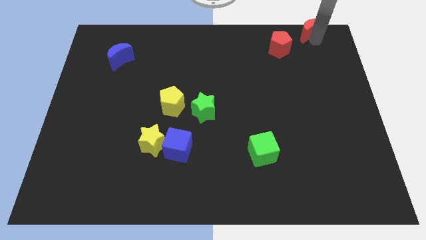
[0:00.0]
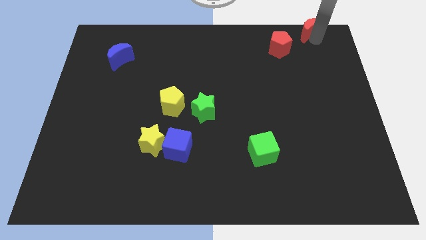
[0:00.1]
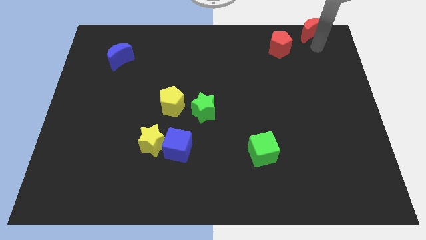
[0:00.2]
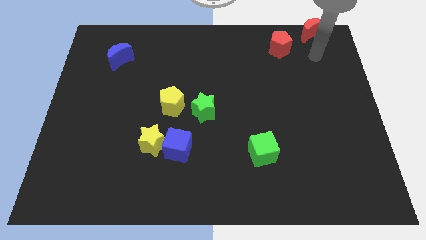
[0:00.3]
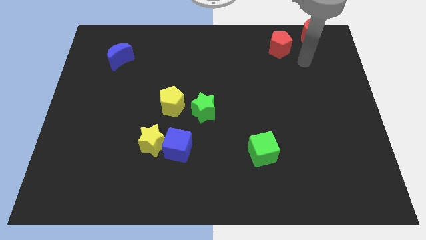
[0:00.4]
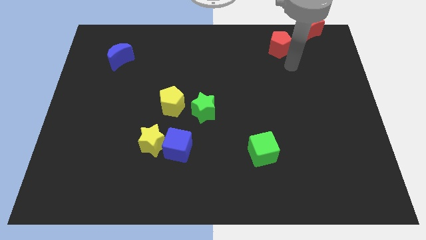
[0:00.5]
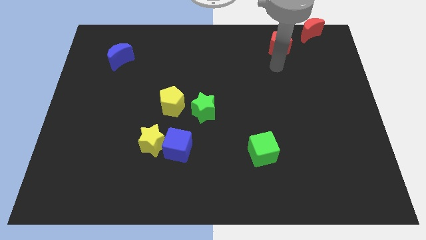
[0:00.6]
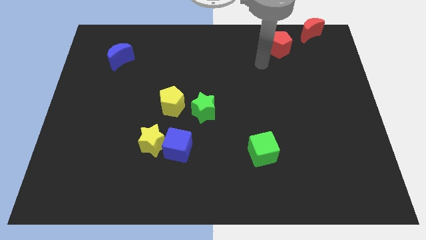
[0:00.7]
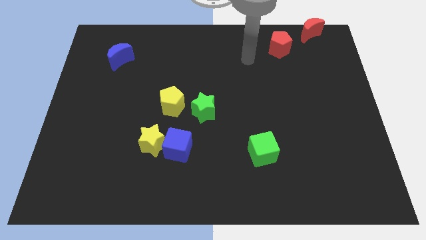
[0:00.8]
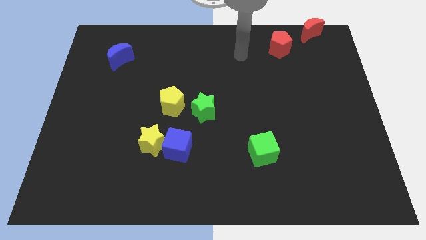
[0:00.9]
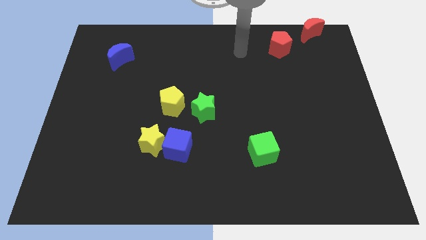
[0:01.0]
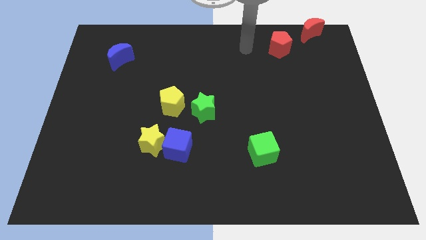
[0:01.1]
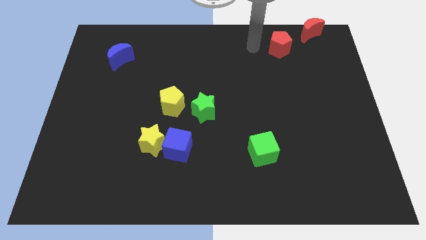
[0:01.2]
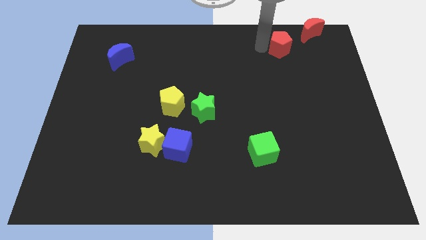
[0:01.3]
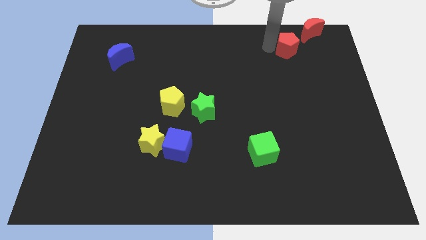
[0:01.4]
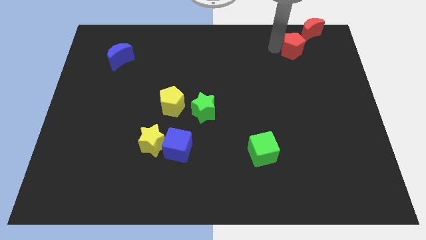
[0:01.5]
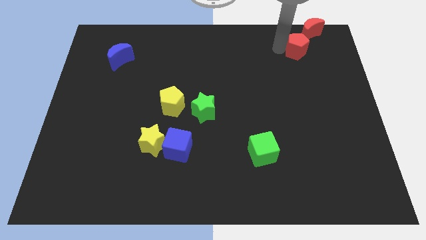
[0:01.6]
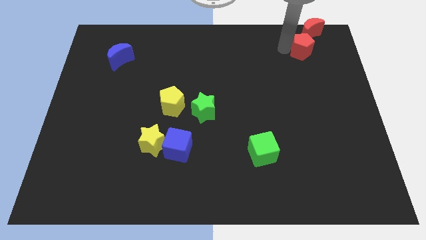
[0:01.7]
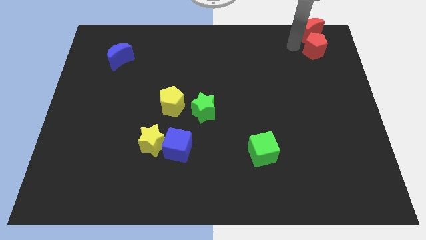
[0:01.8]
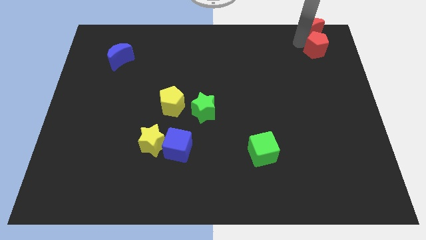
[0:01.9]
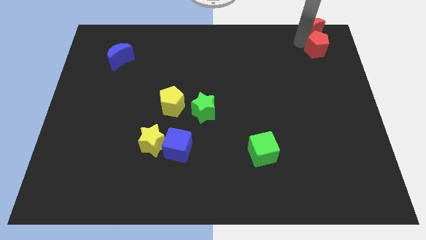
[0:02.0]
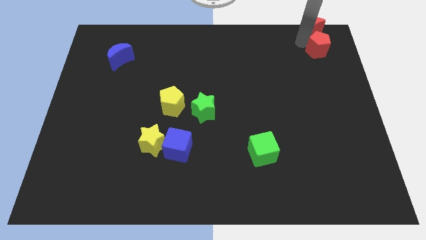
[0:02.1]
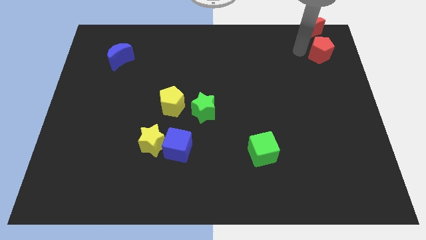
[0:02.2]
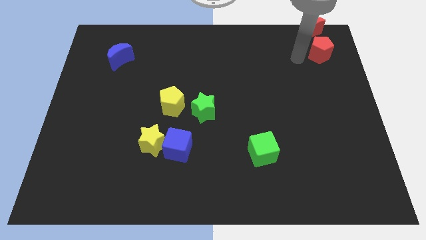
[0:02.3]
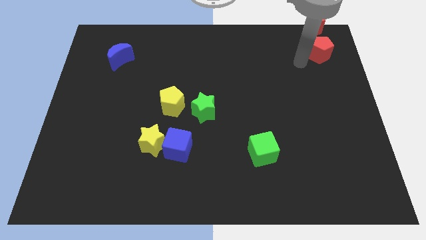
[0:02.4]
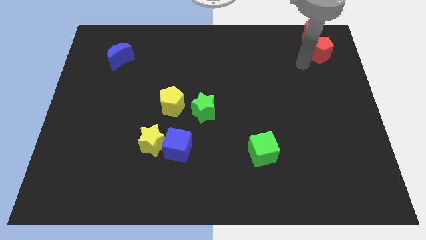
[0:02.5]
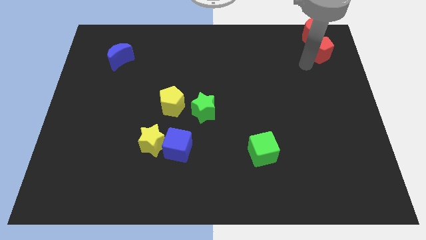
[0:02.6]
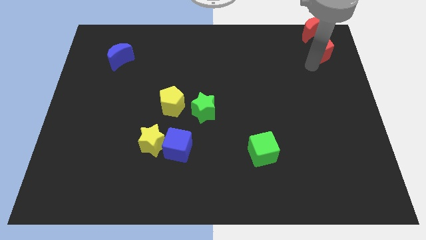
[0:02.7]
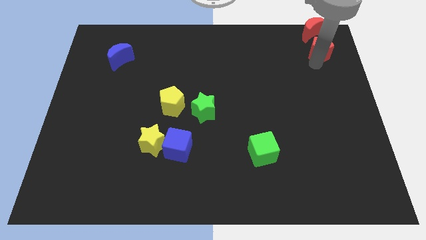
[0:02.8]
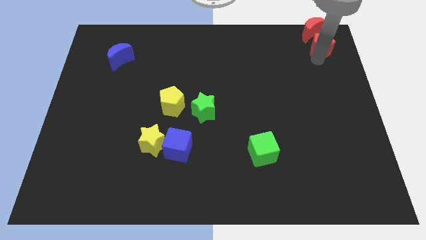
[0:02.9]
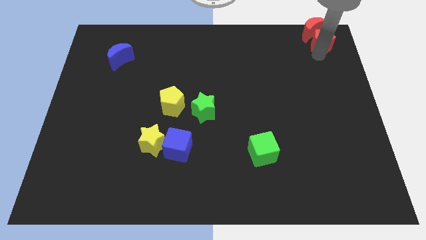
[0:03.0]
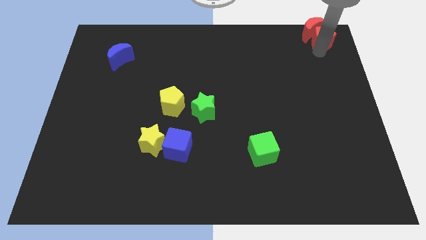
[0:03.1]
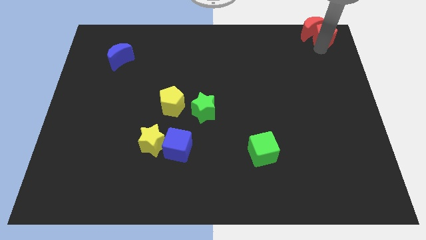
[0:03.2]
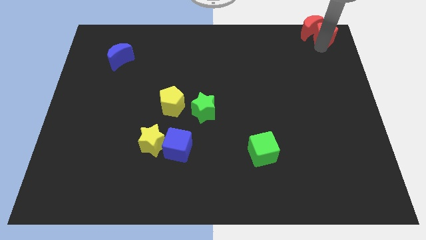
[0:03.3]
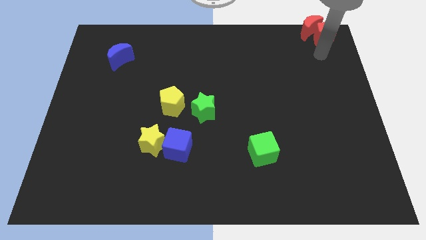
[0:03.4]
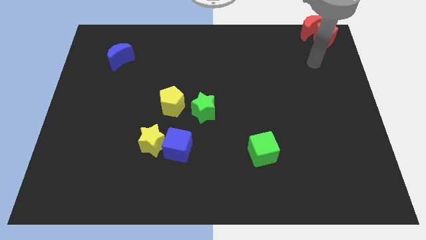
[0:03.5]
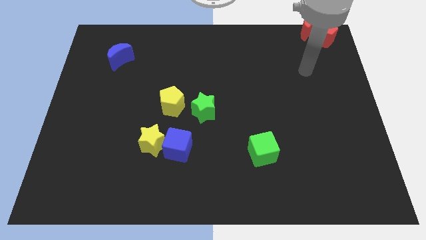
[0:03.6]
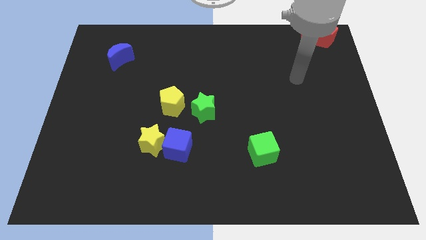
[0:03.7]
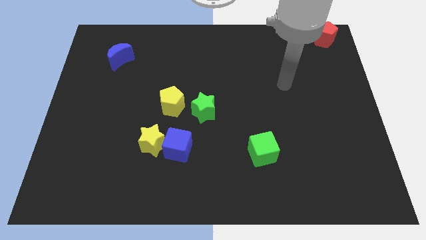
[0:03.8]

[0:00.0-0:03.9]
move the red pentagon towards the top right corner of the board

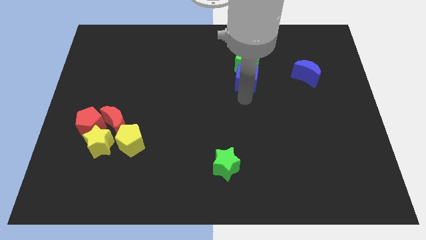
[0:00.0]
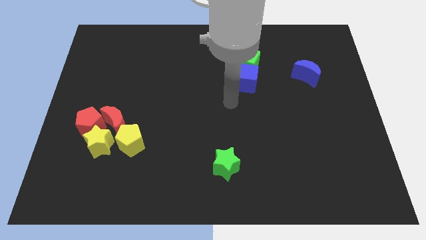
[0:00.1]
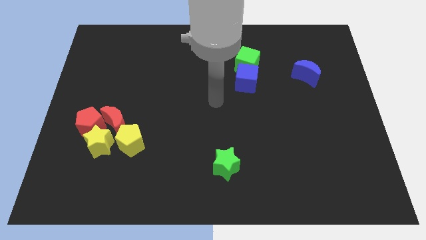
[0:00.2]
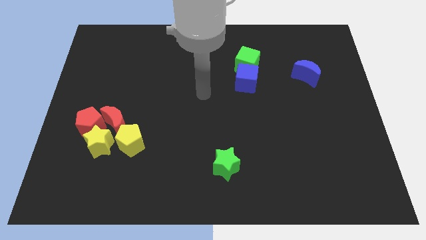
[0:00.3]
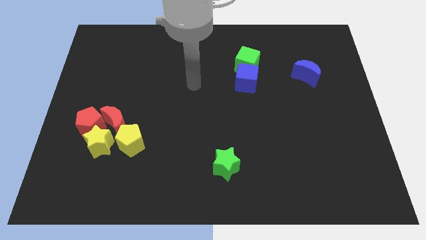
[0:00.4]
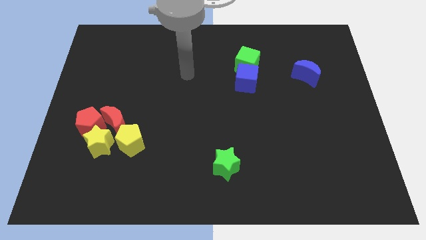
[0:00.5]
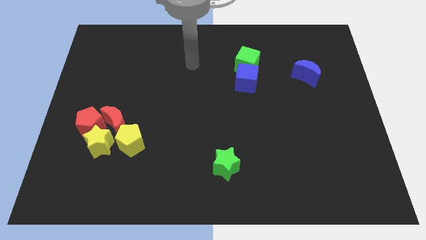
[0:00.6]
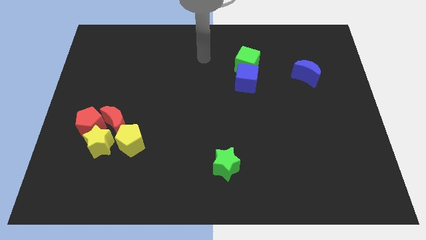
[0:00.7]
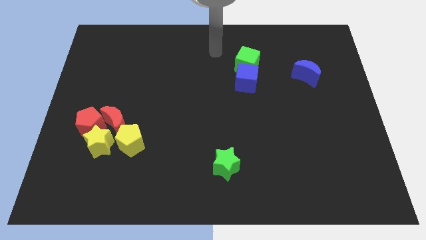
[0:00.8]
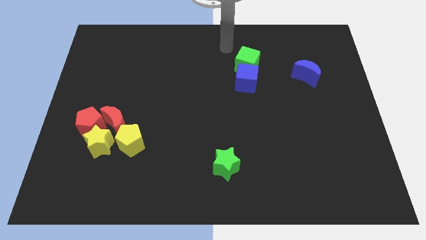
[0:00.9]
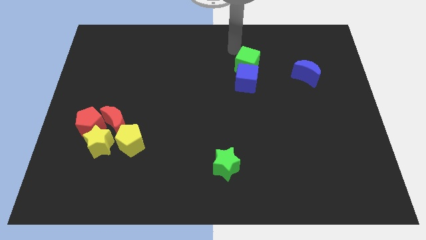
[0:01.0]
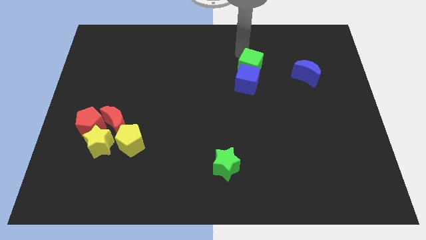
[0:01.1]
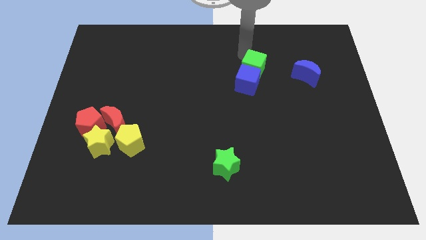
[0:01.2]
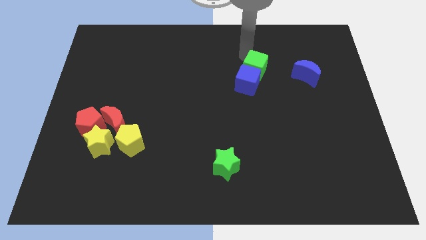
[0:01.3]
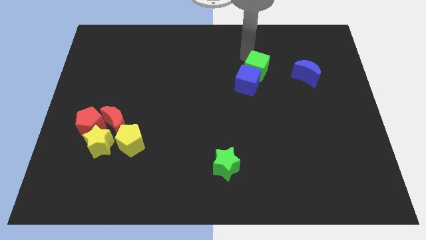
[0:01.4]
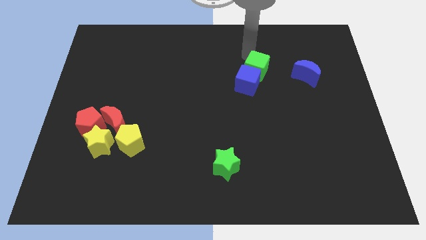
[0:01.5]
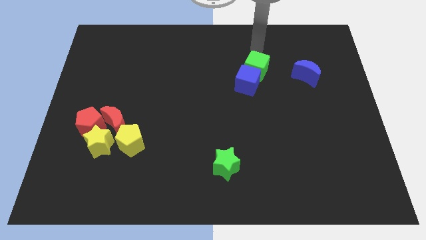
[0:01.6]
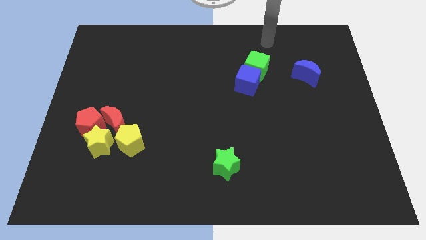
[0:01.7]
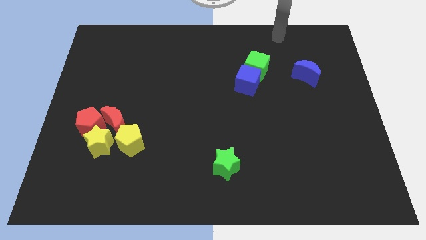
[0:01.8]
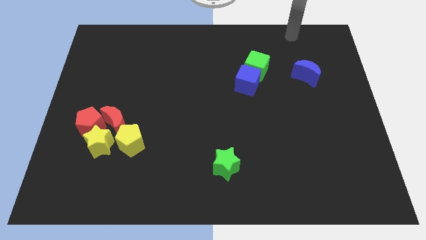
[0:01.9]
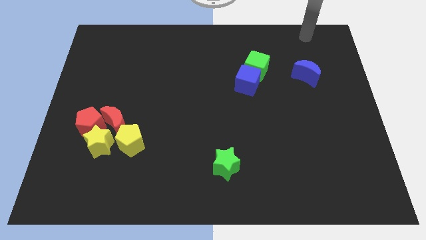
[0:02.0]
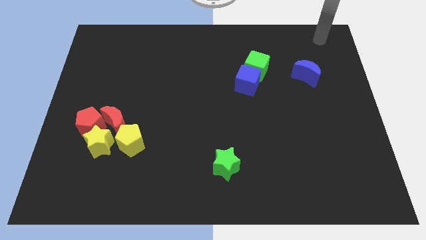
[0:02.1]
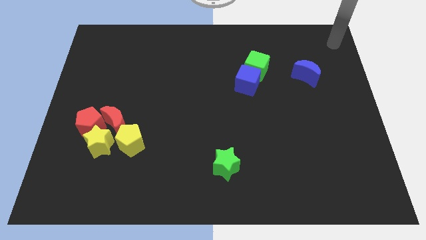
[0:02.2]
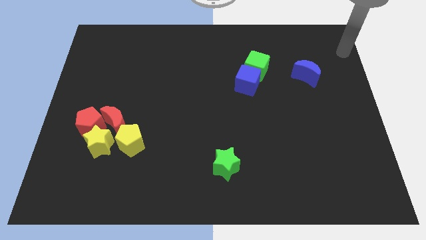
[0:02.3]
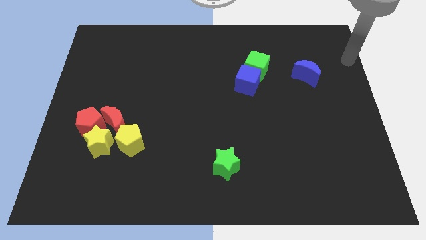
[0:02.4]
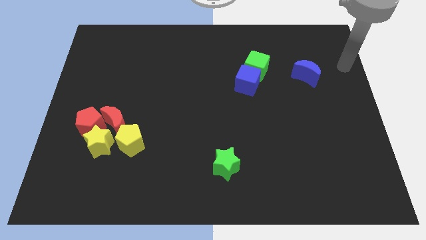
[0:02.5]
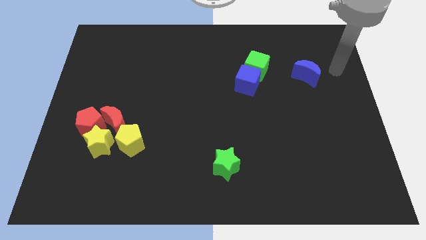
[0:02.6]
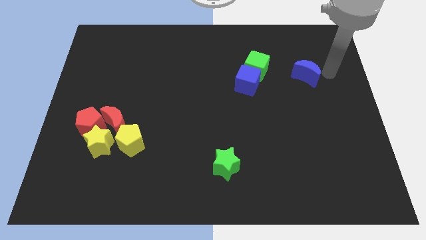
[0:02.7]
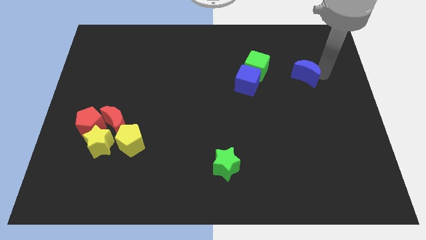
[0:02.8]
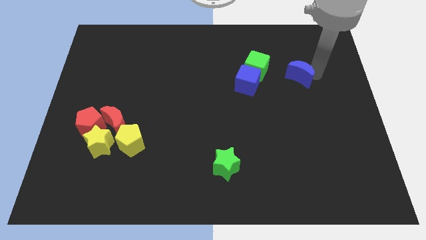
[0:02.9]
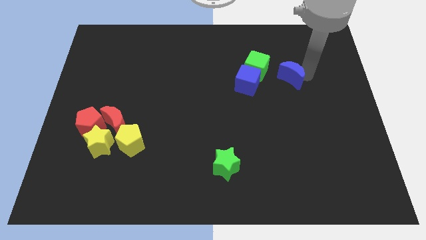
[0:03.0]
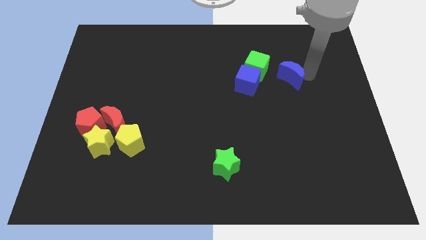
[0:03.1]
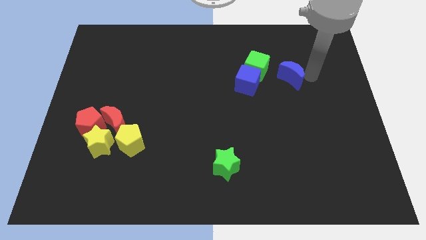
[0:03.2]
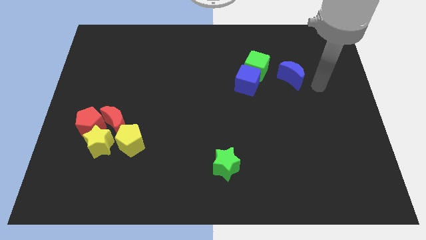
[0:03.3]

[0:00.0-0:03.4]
slightly move the blue crescent towards the right side of the green cube

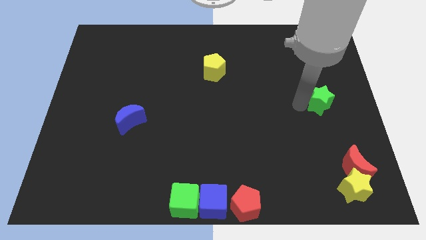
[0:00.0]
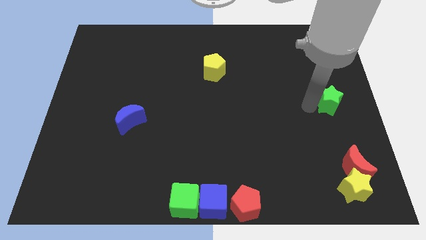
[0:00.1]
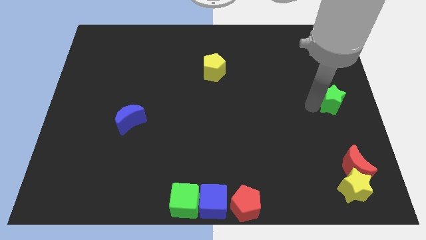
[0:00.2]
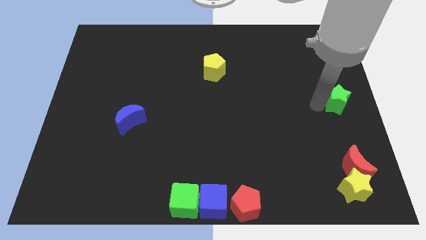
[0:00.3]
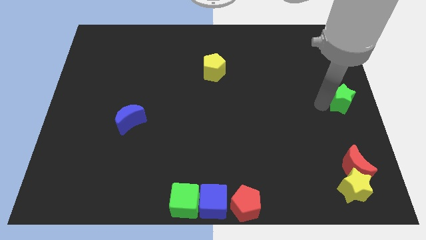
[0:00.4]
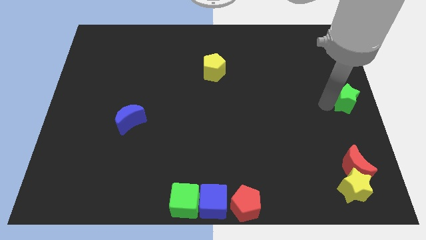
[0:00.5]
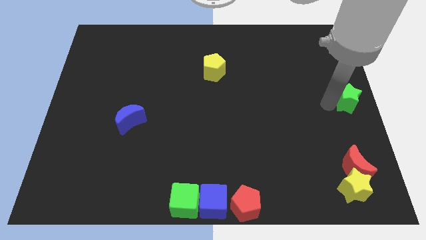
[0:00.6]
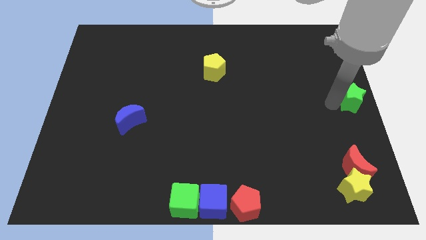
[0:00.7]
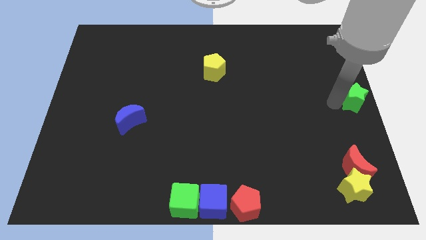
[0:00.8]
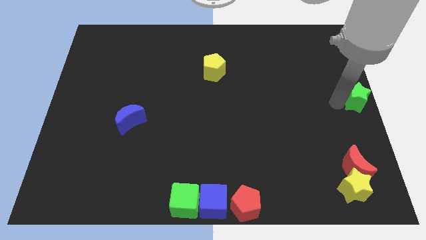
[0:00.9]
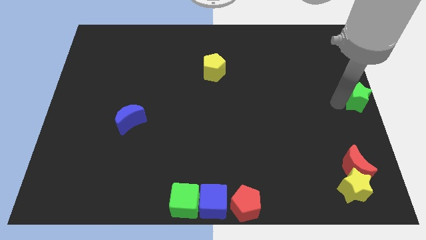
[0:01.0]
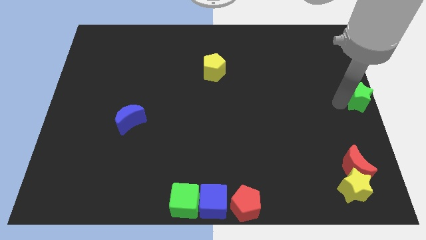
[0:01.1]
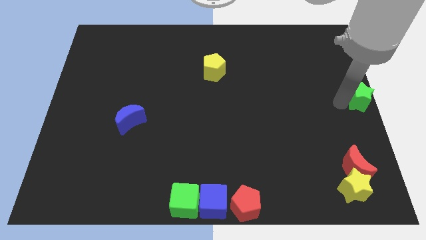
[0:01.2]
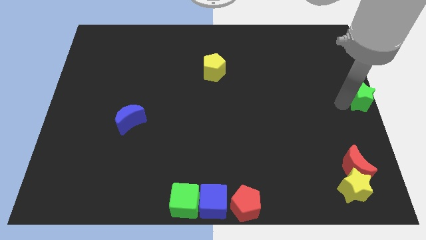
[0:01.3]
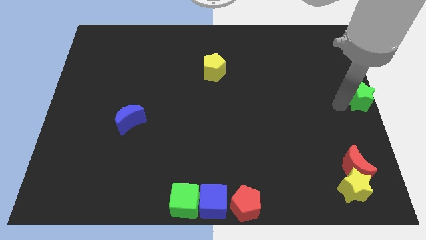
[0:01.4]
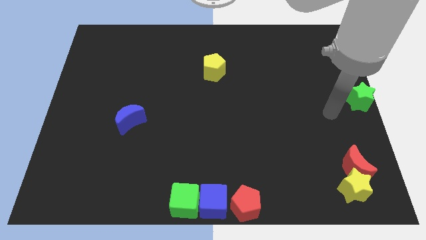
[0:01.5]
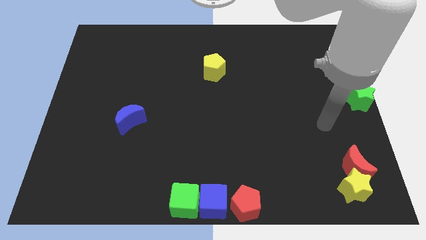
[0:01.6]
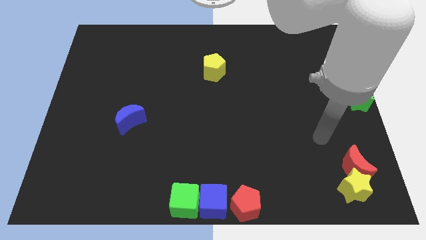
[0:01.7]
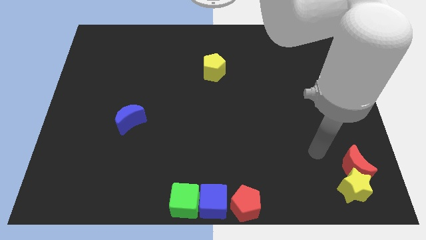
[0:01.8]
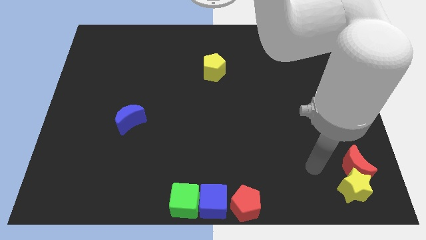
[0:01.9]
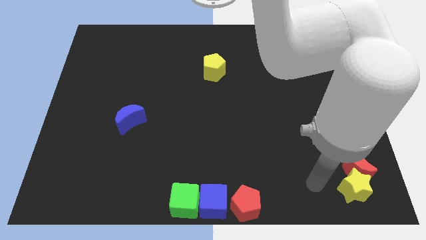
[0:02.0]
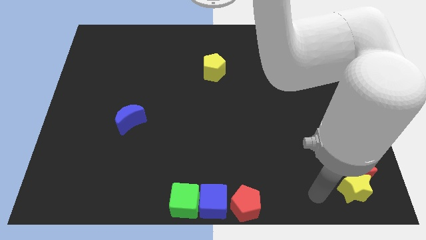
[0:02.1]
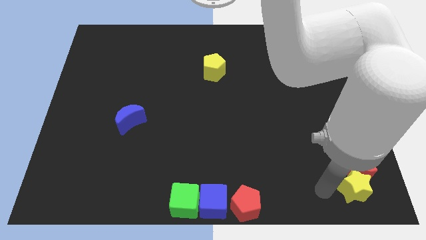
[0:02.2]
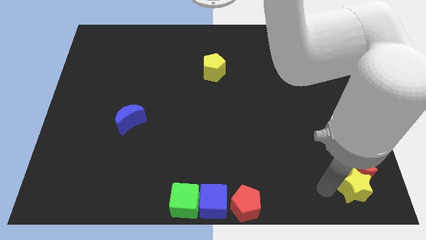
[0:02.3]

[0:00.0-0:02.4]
place green star to the right center of the board
